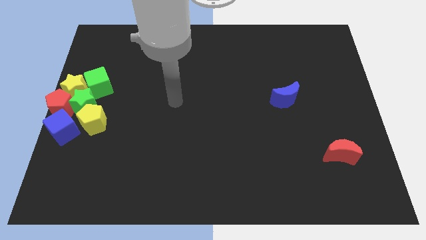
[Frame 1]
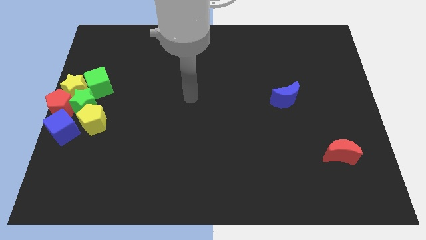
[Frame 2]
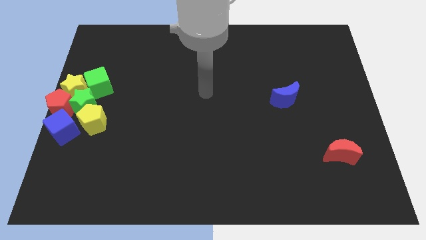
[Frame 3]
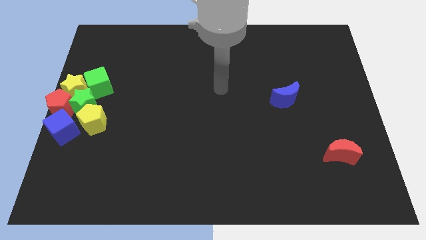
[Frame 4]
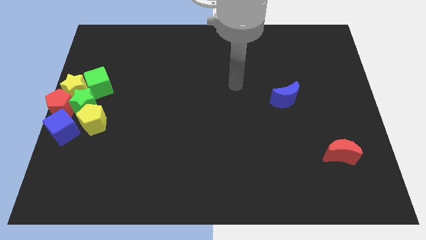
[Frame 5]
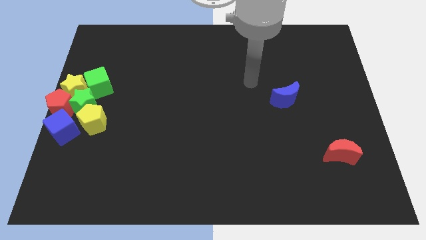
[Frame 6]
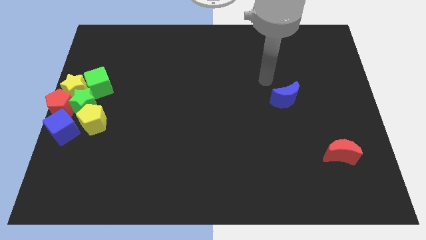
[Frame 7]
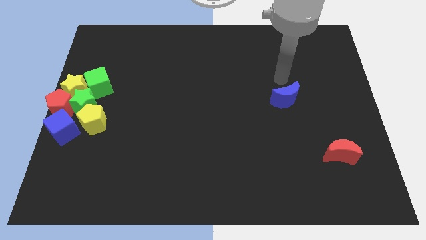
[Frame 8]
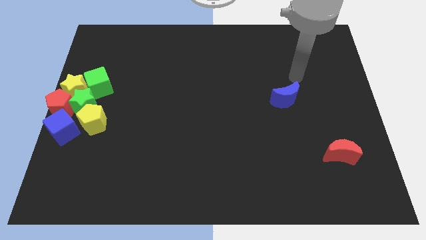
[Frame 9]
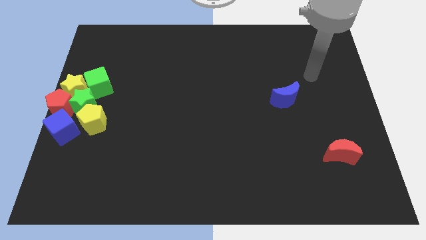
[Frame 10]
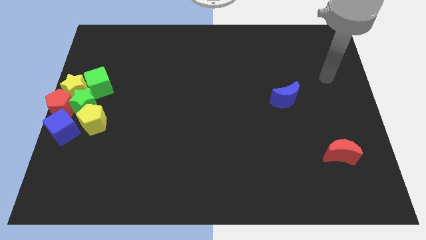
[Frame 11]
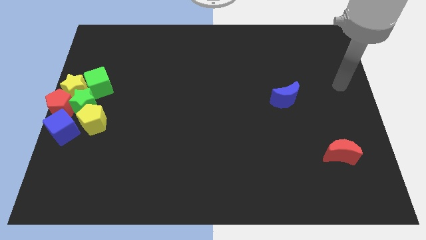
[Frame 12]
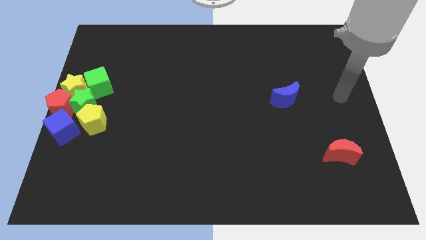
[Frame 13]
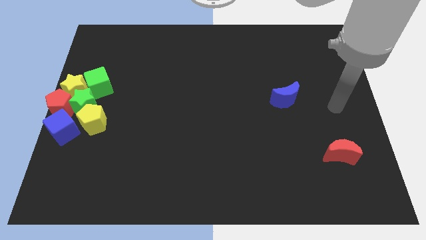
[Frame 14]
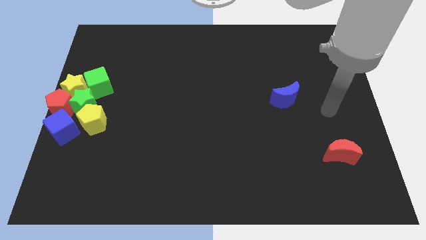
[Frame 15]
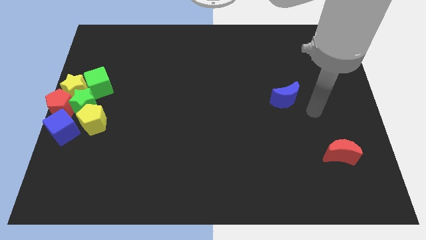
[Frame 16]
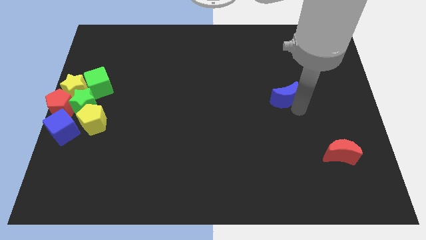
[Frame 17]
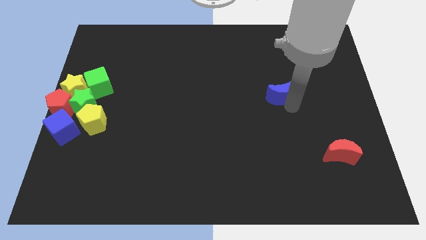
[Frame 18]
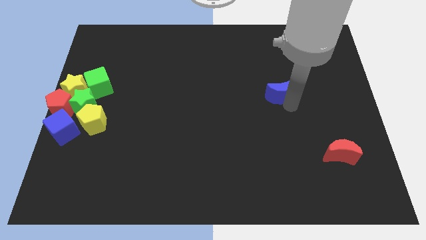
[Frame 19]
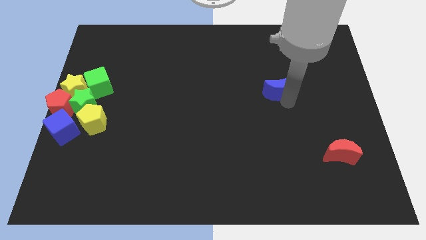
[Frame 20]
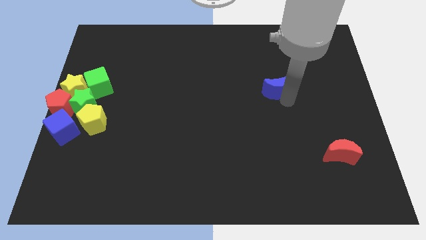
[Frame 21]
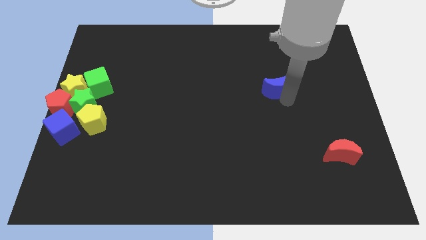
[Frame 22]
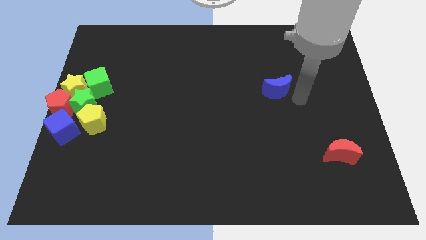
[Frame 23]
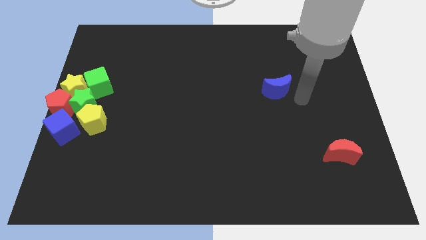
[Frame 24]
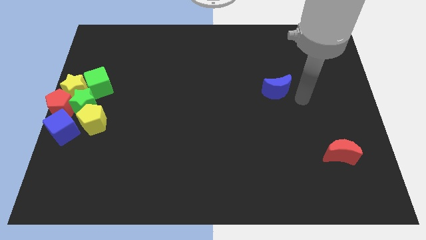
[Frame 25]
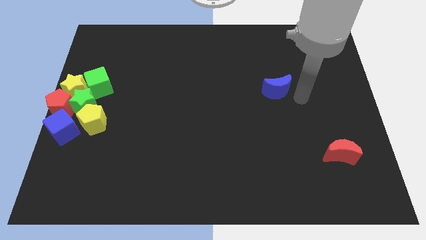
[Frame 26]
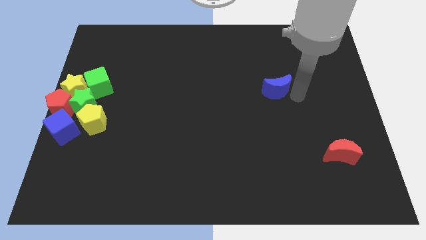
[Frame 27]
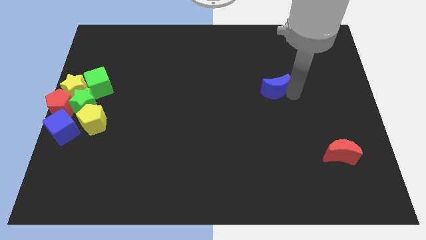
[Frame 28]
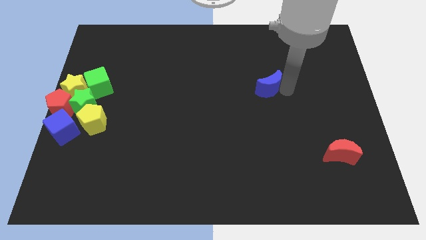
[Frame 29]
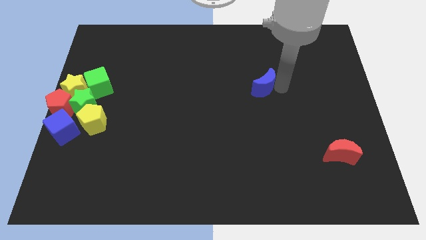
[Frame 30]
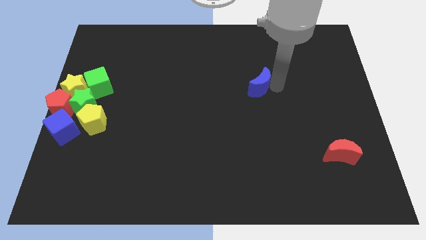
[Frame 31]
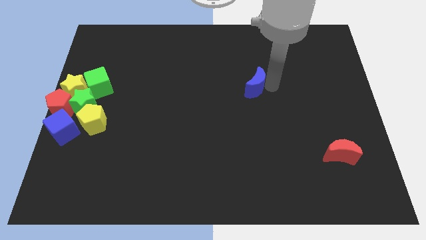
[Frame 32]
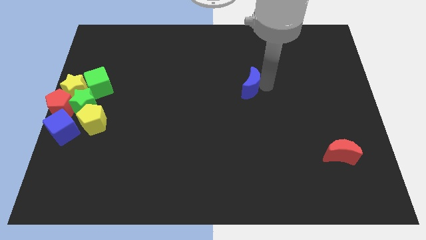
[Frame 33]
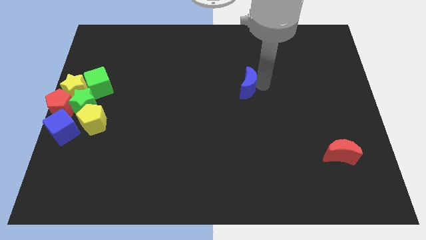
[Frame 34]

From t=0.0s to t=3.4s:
drag the blue moon towards the left side of the board

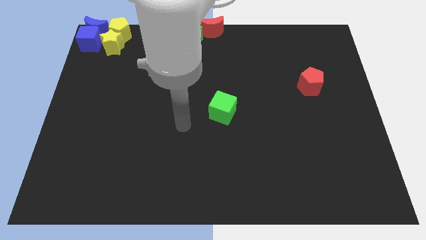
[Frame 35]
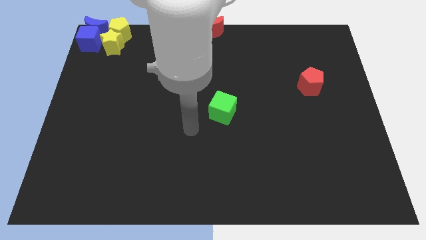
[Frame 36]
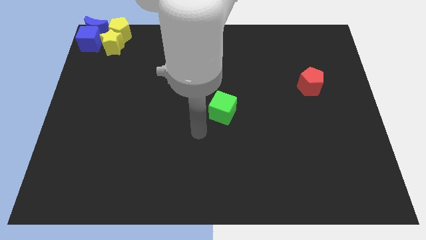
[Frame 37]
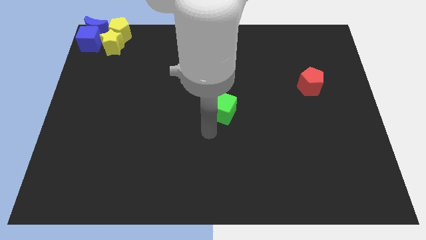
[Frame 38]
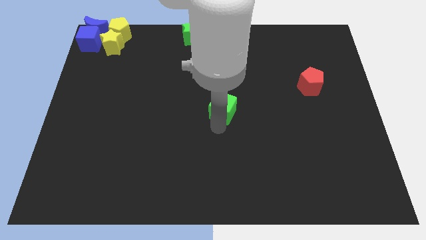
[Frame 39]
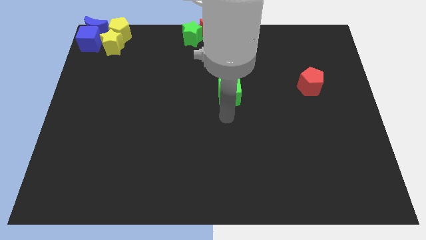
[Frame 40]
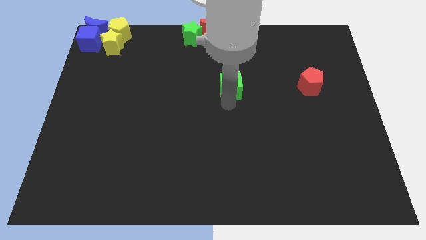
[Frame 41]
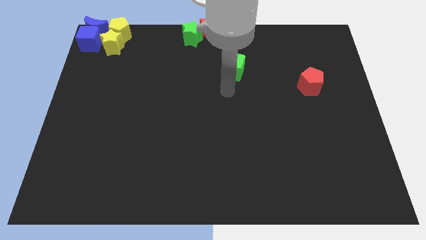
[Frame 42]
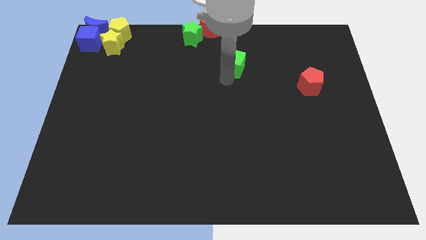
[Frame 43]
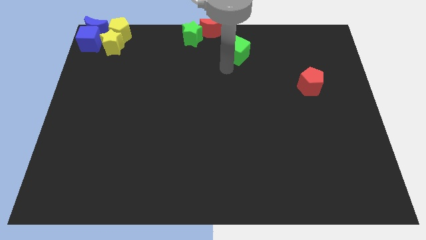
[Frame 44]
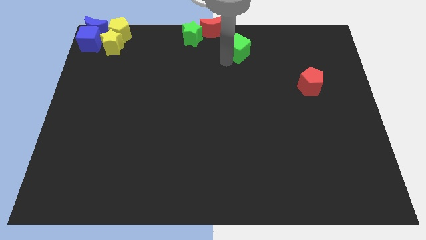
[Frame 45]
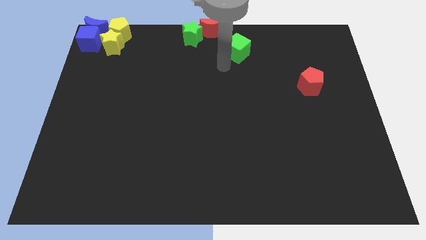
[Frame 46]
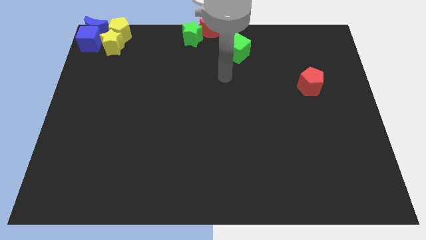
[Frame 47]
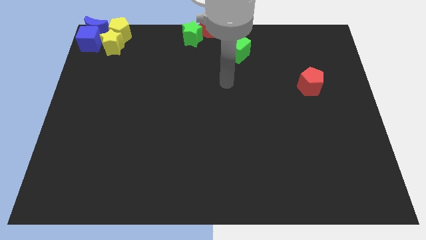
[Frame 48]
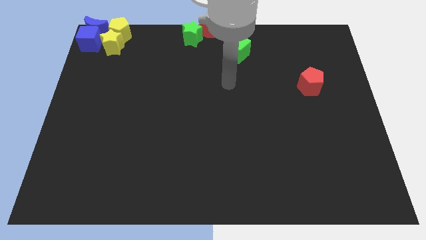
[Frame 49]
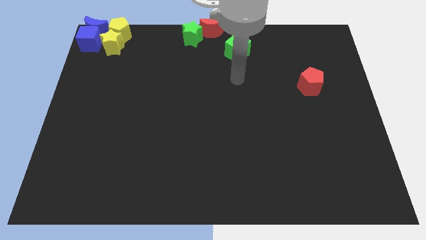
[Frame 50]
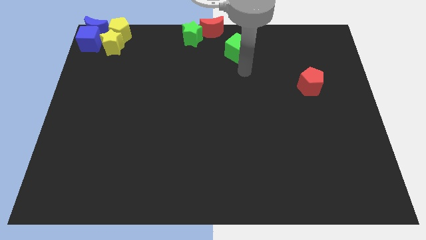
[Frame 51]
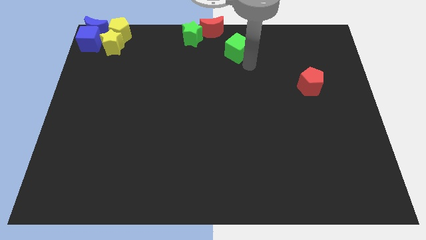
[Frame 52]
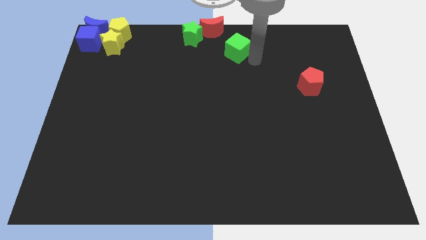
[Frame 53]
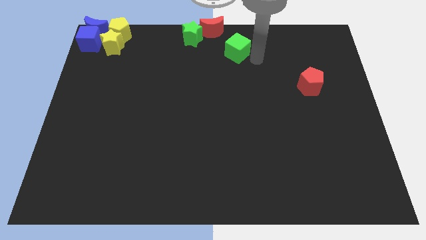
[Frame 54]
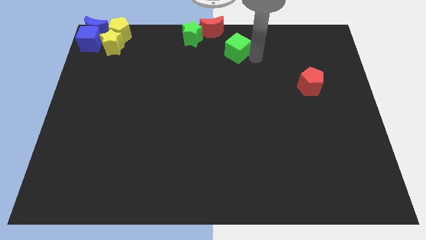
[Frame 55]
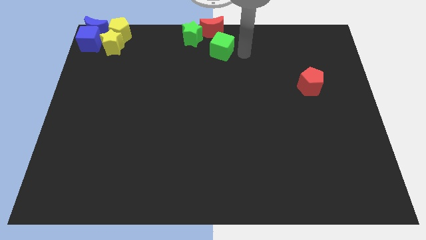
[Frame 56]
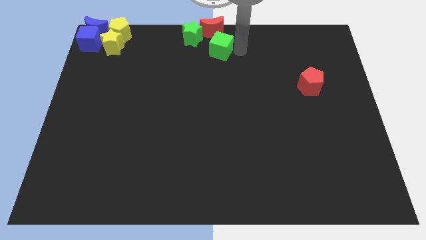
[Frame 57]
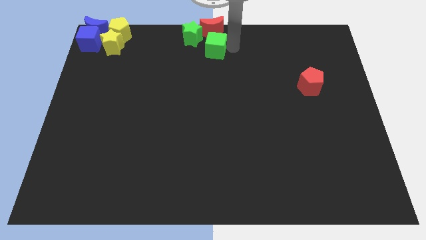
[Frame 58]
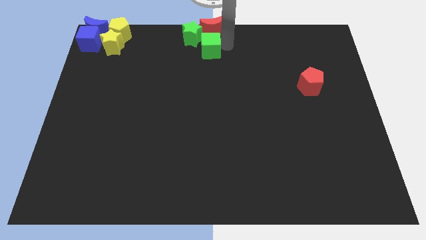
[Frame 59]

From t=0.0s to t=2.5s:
push the green cube to the bottom of the red crescent

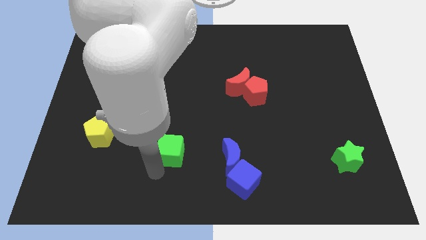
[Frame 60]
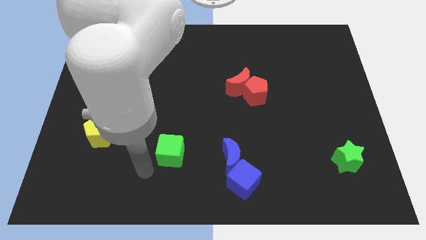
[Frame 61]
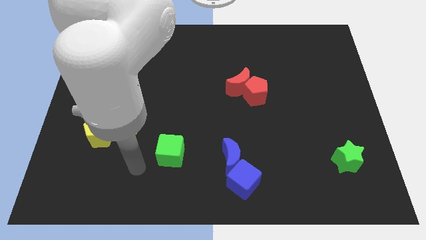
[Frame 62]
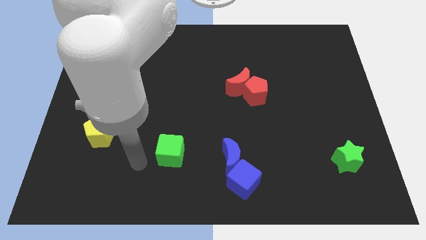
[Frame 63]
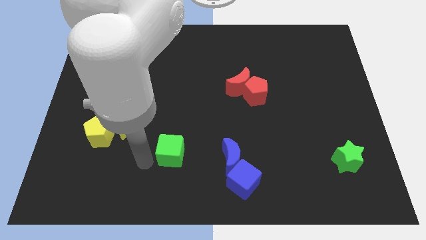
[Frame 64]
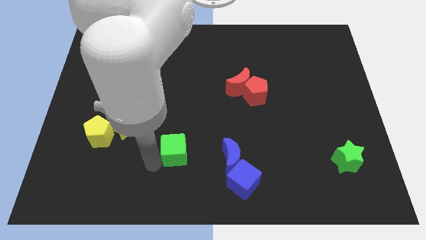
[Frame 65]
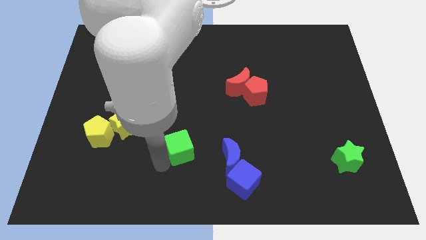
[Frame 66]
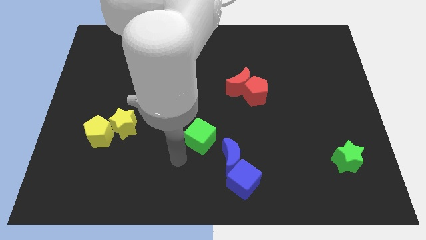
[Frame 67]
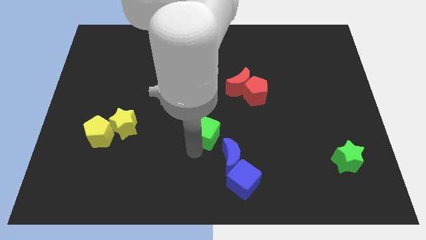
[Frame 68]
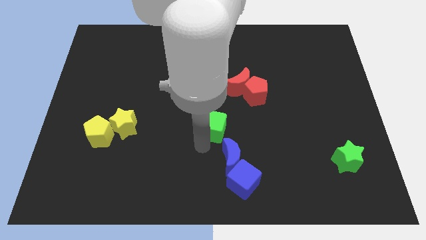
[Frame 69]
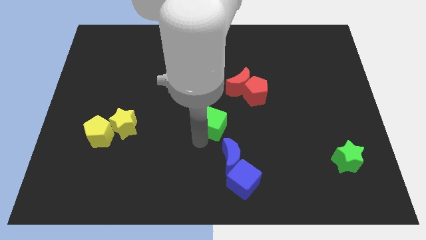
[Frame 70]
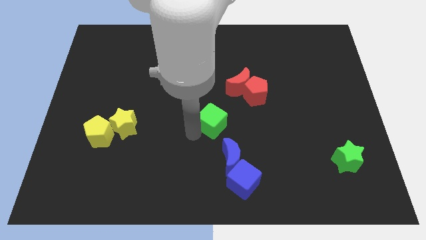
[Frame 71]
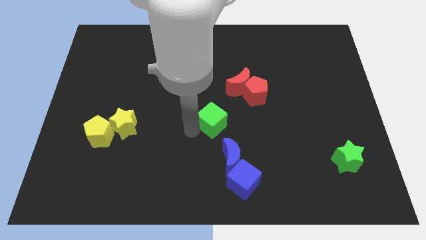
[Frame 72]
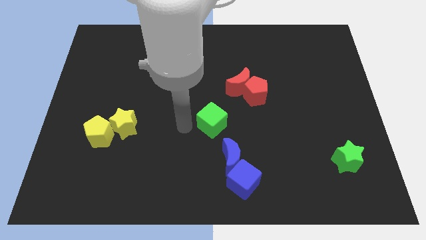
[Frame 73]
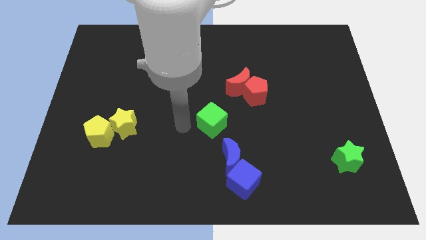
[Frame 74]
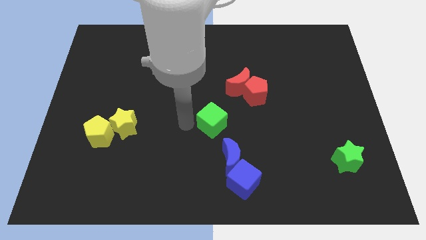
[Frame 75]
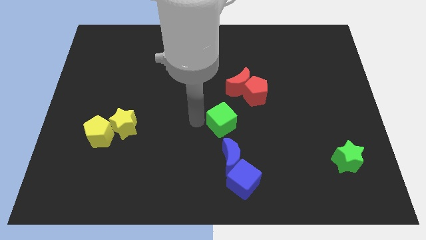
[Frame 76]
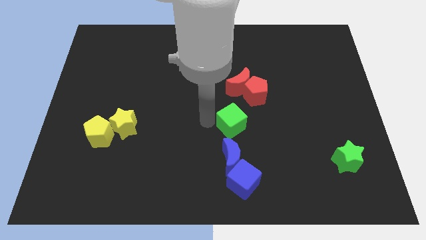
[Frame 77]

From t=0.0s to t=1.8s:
move the green cube between red and blue blocks

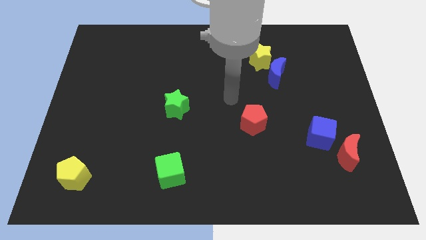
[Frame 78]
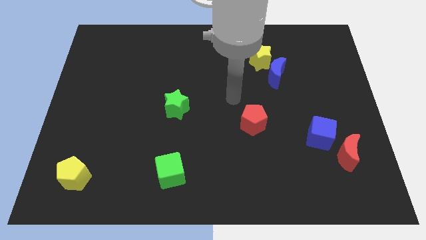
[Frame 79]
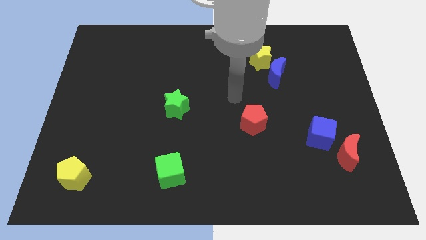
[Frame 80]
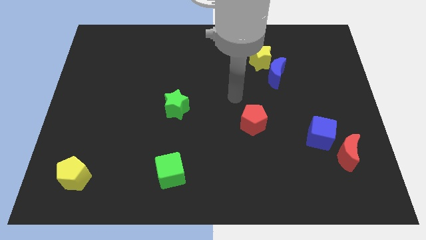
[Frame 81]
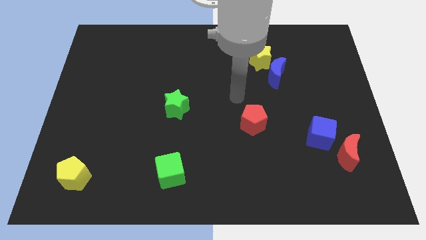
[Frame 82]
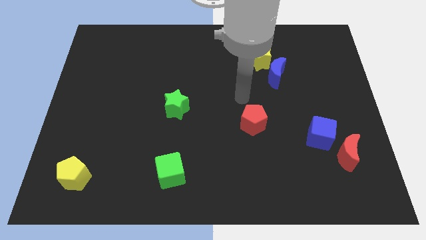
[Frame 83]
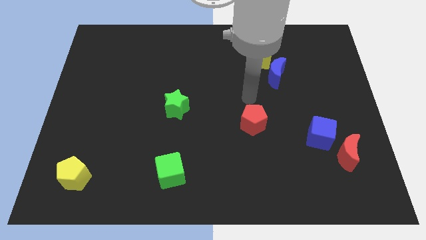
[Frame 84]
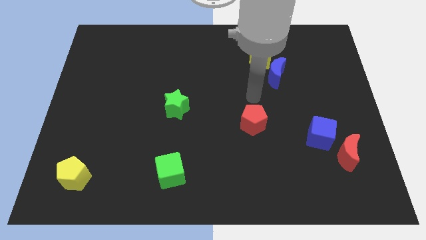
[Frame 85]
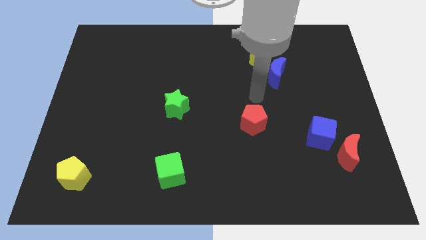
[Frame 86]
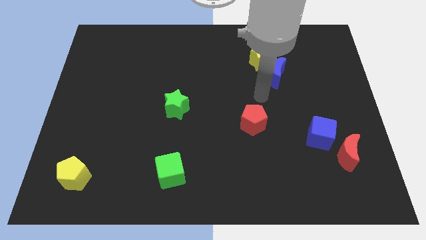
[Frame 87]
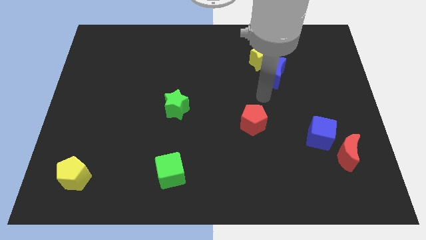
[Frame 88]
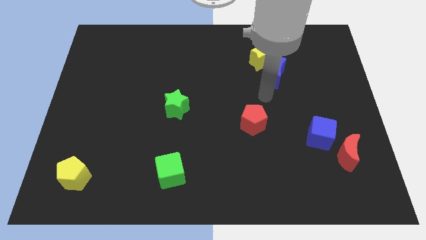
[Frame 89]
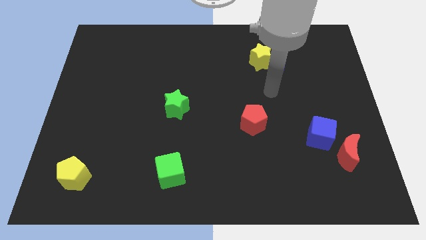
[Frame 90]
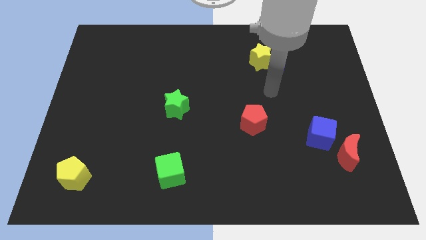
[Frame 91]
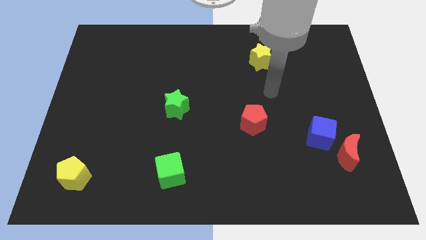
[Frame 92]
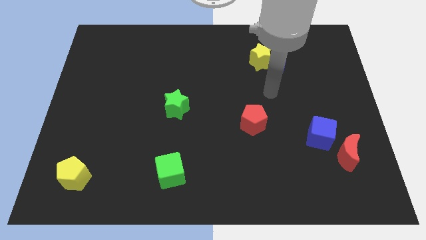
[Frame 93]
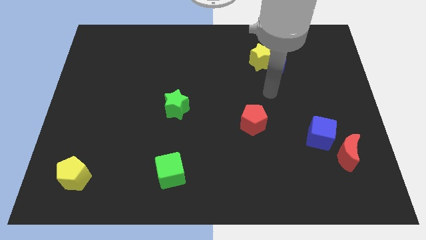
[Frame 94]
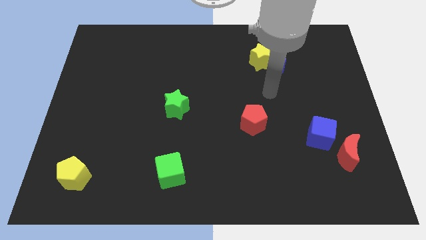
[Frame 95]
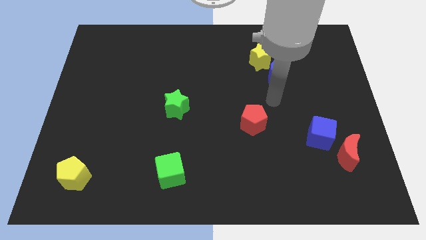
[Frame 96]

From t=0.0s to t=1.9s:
move your arm below the blue moon
